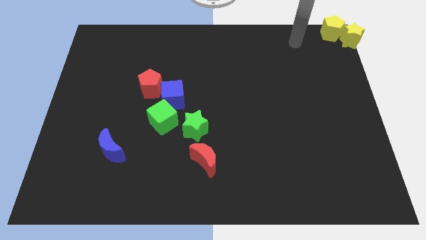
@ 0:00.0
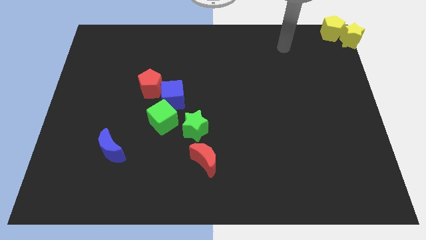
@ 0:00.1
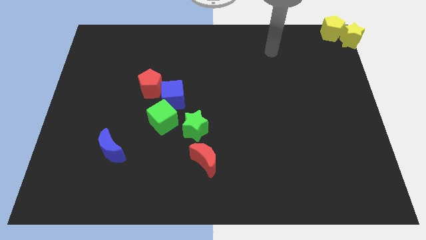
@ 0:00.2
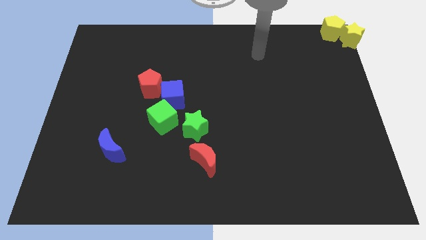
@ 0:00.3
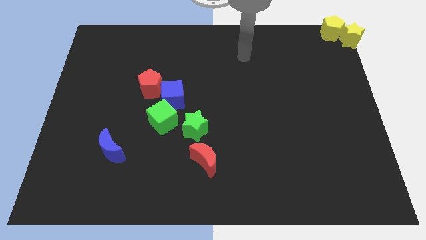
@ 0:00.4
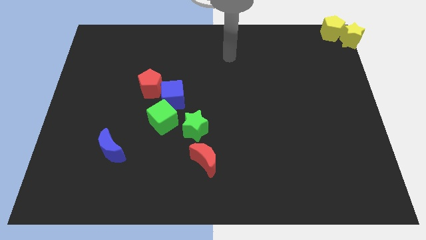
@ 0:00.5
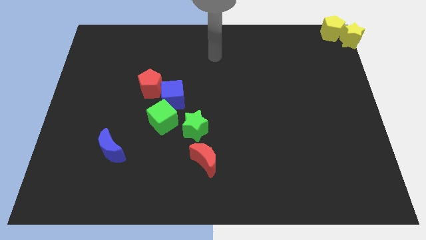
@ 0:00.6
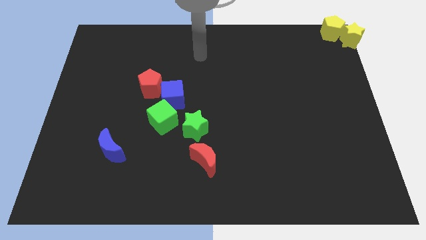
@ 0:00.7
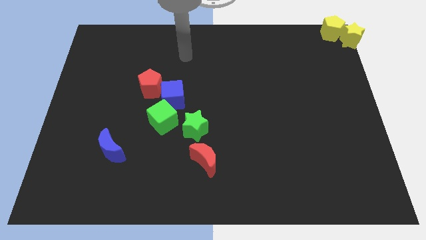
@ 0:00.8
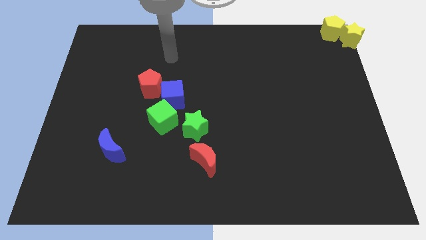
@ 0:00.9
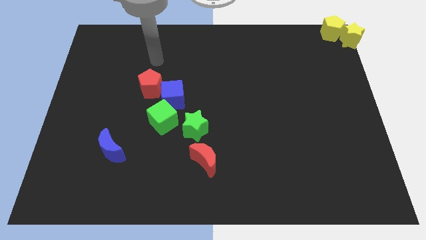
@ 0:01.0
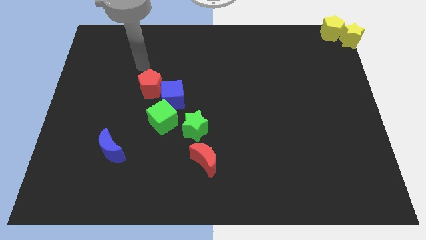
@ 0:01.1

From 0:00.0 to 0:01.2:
point your arm at the top of the red pentagon

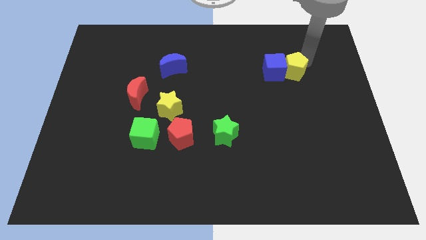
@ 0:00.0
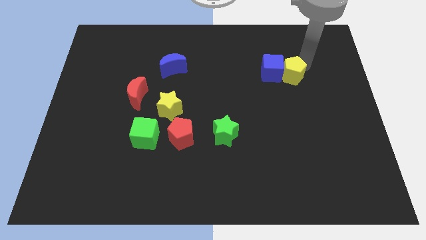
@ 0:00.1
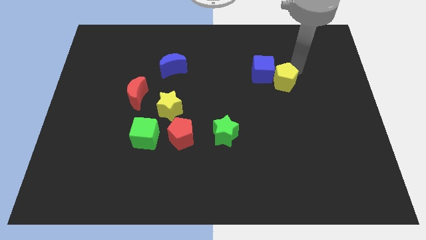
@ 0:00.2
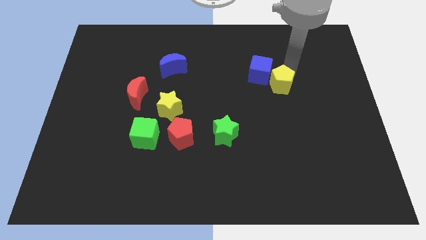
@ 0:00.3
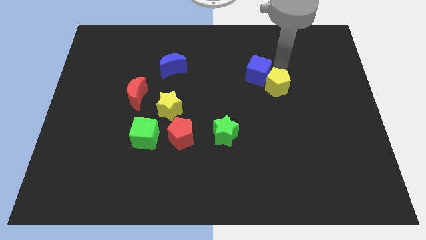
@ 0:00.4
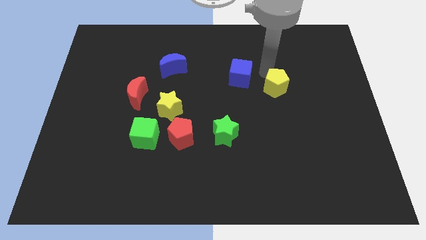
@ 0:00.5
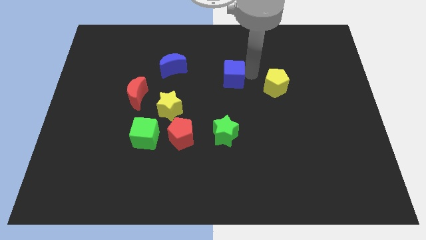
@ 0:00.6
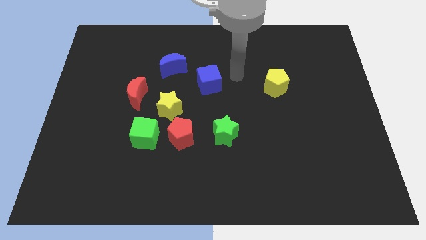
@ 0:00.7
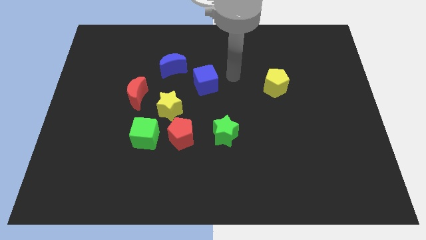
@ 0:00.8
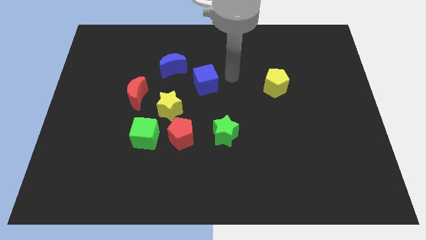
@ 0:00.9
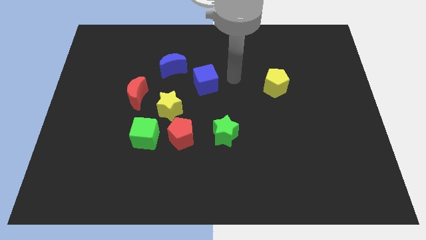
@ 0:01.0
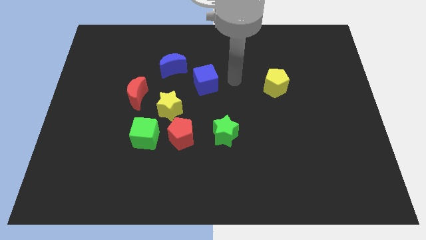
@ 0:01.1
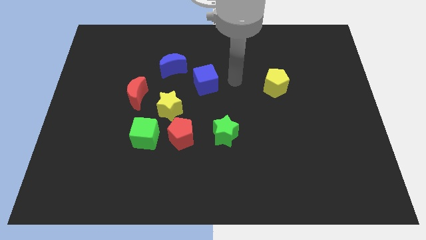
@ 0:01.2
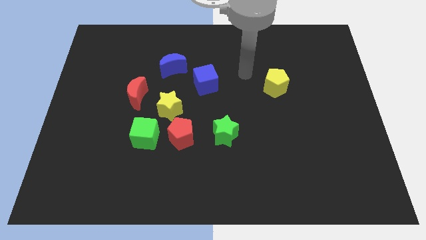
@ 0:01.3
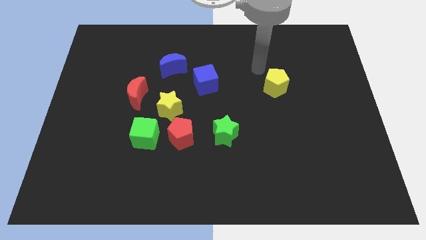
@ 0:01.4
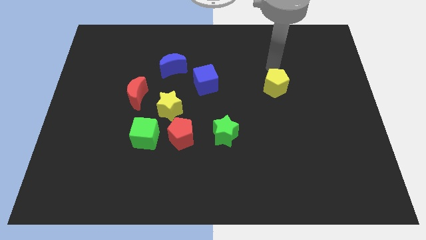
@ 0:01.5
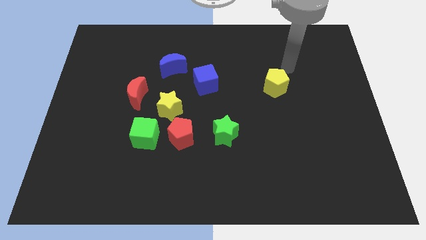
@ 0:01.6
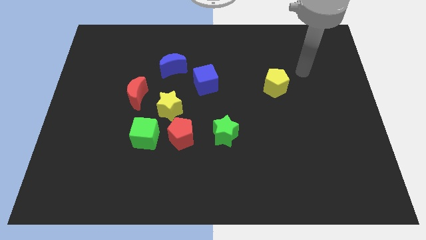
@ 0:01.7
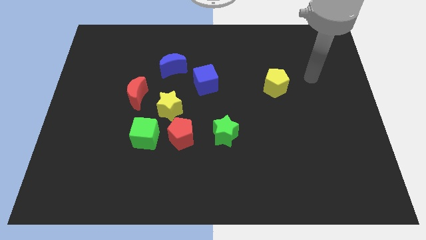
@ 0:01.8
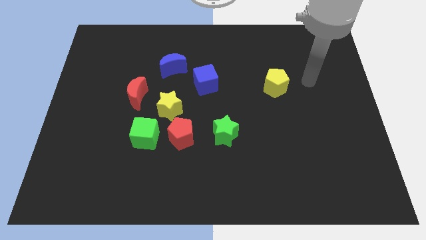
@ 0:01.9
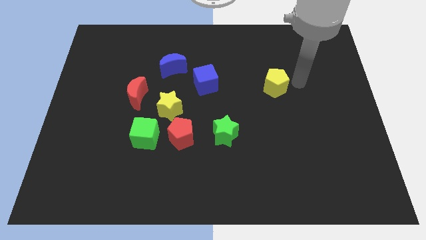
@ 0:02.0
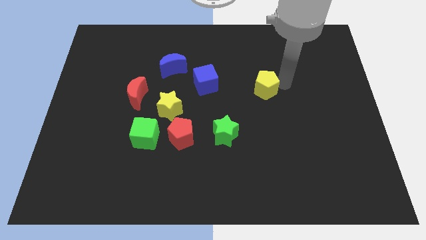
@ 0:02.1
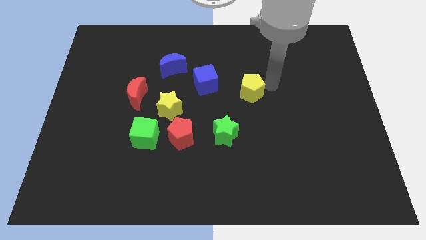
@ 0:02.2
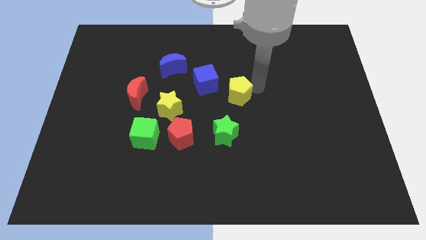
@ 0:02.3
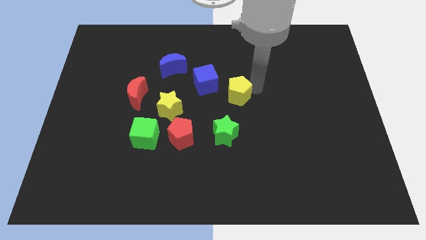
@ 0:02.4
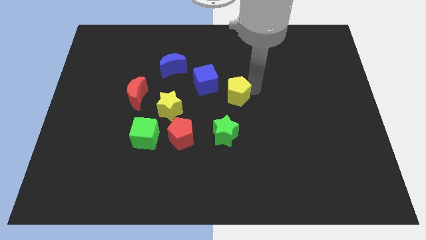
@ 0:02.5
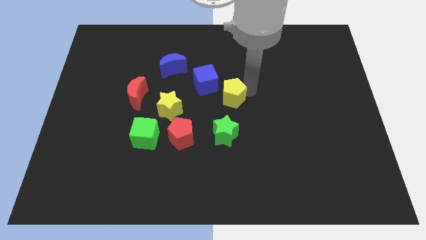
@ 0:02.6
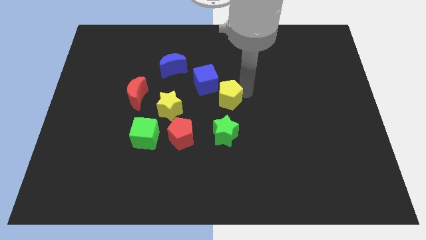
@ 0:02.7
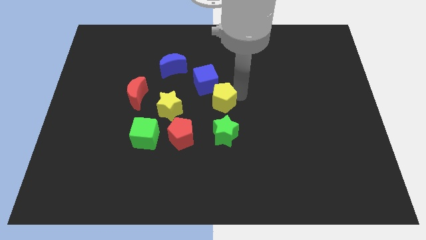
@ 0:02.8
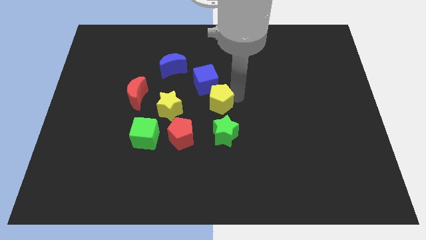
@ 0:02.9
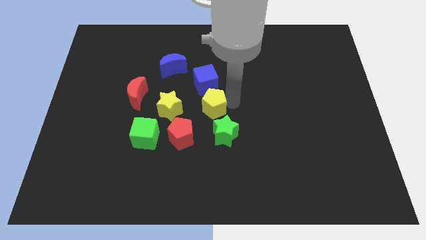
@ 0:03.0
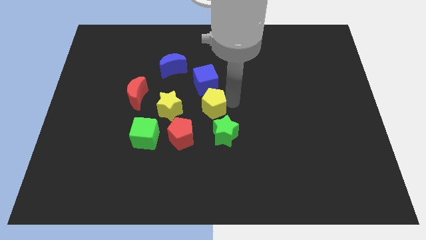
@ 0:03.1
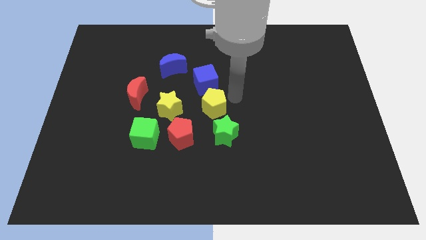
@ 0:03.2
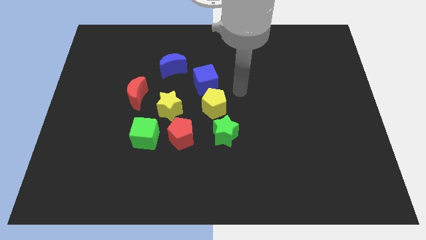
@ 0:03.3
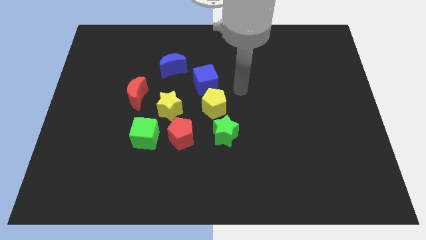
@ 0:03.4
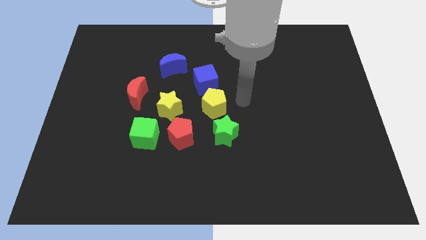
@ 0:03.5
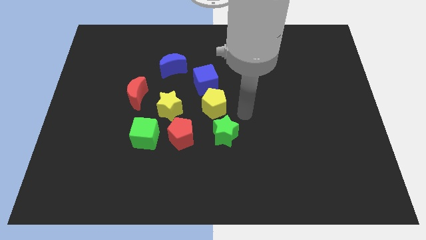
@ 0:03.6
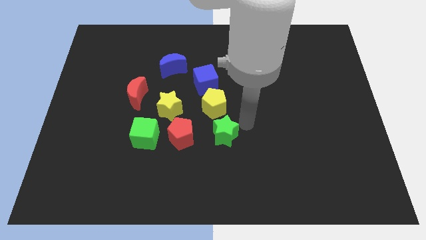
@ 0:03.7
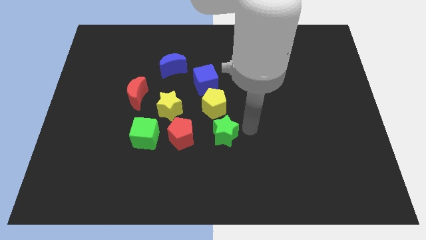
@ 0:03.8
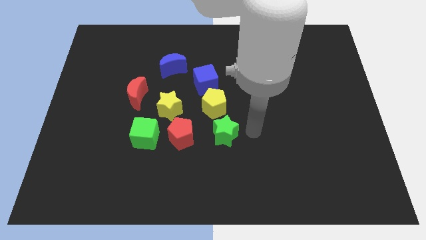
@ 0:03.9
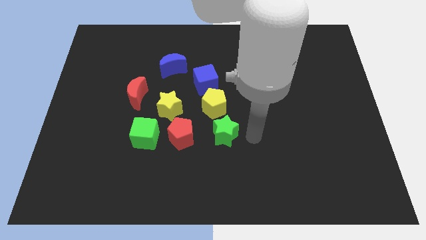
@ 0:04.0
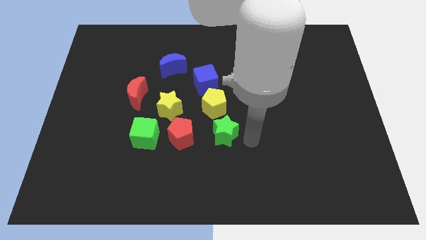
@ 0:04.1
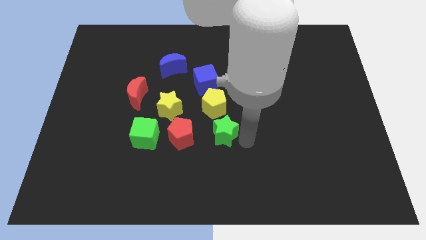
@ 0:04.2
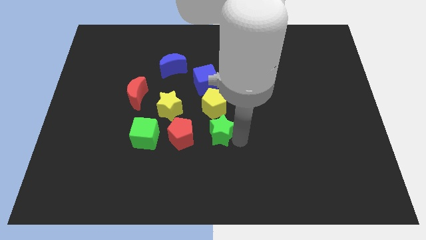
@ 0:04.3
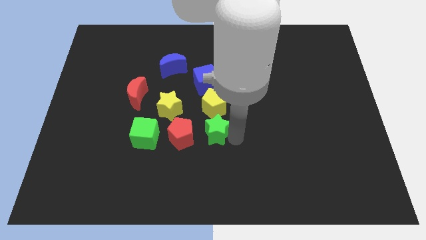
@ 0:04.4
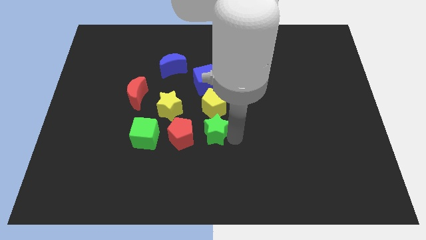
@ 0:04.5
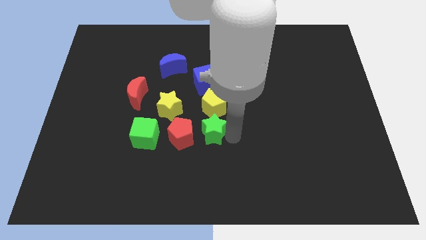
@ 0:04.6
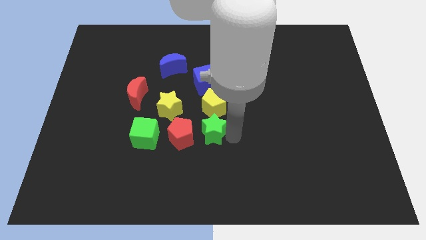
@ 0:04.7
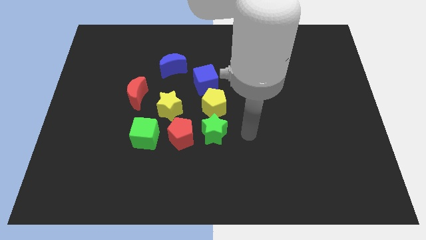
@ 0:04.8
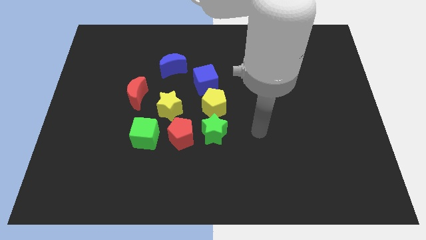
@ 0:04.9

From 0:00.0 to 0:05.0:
place the blue cube and yellow pentagon vertically to the green star

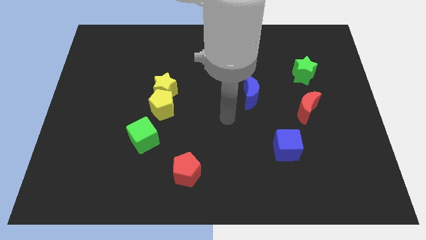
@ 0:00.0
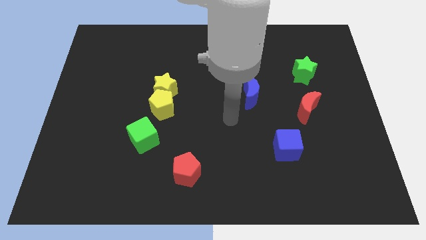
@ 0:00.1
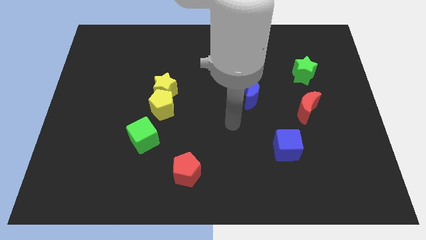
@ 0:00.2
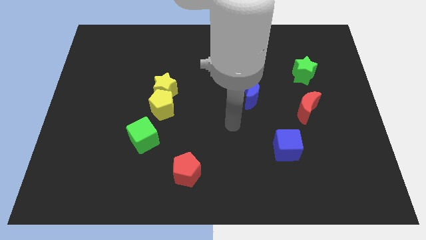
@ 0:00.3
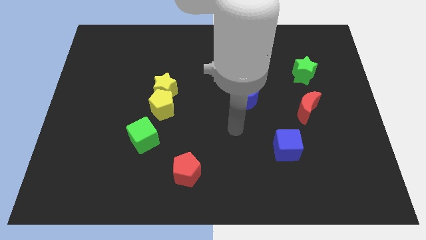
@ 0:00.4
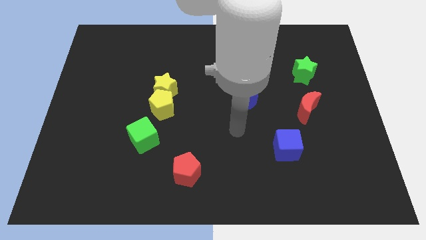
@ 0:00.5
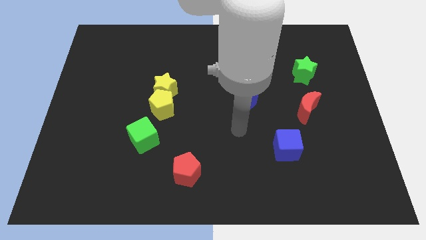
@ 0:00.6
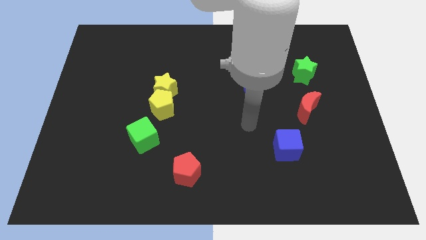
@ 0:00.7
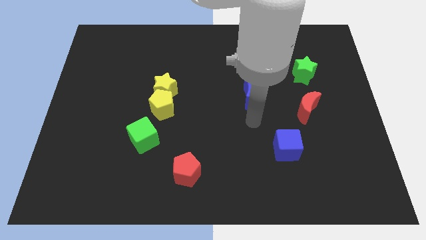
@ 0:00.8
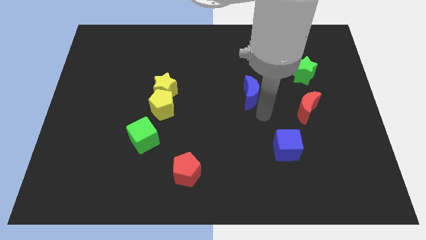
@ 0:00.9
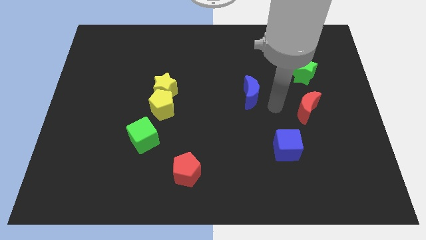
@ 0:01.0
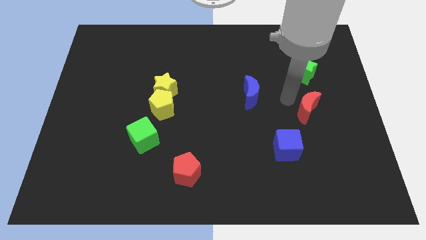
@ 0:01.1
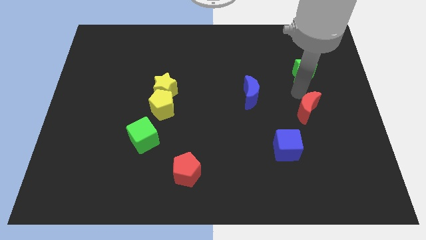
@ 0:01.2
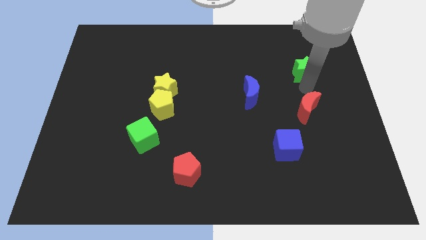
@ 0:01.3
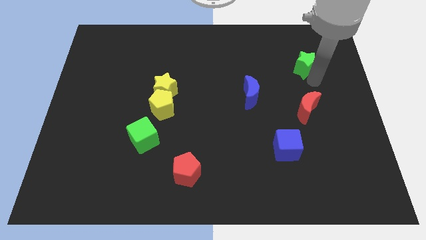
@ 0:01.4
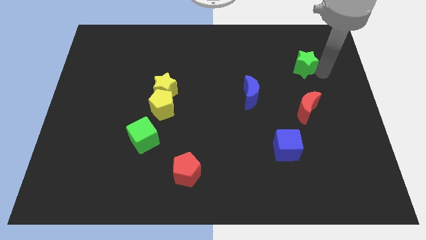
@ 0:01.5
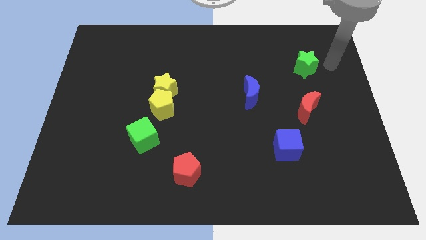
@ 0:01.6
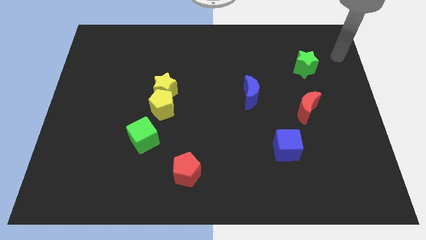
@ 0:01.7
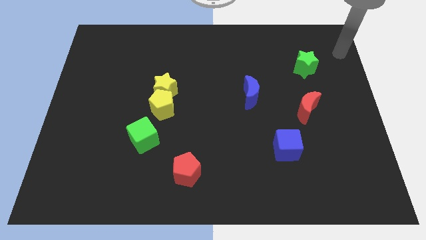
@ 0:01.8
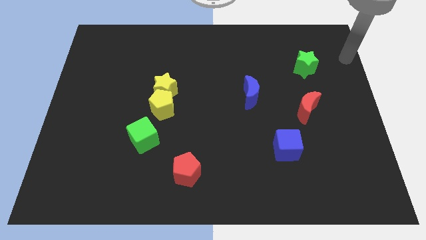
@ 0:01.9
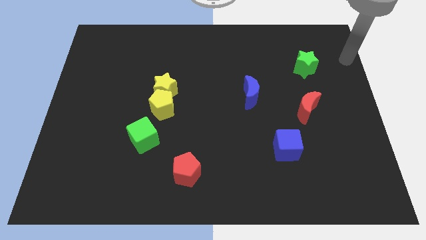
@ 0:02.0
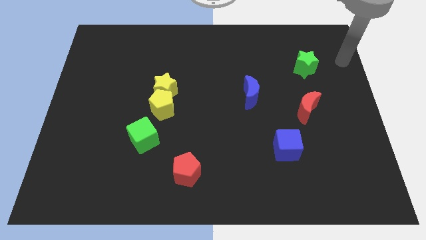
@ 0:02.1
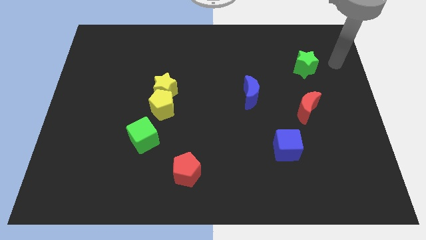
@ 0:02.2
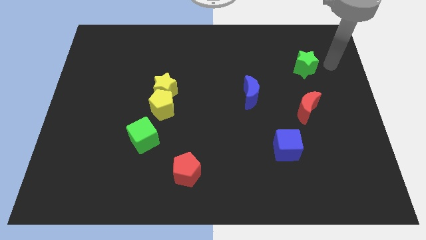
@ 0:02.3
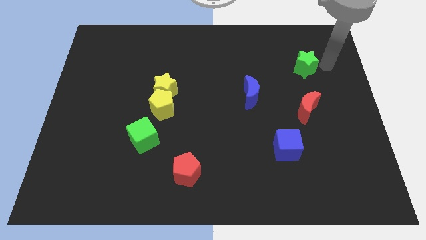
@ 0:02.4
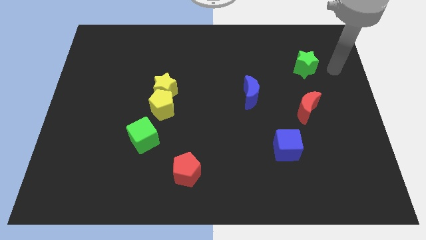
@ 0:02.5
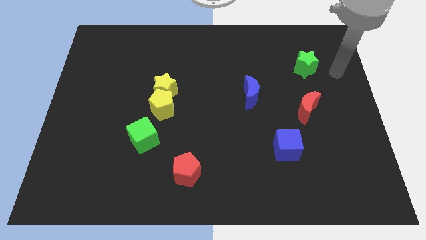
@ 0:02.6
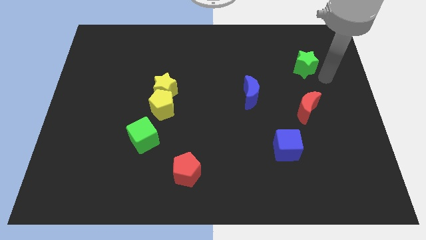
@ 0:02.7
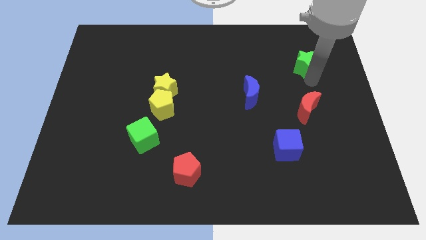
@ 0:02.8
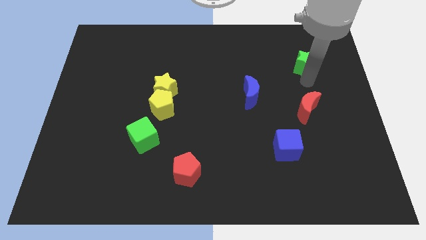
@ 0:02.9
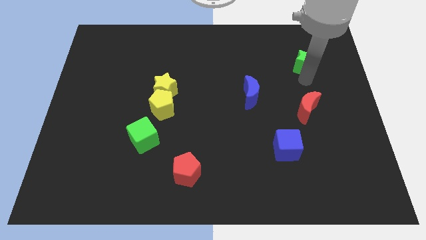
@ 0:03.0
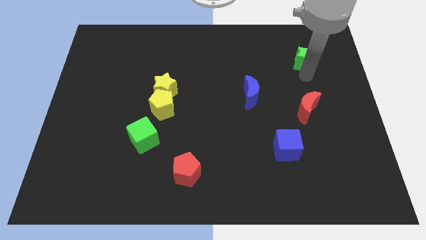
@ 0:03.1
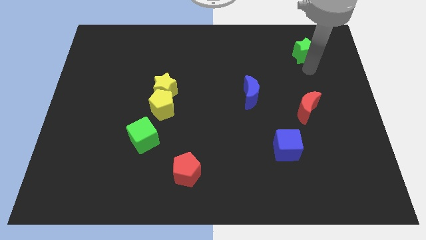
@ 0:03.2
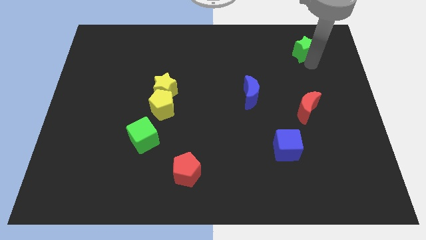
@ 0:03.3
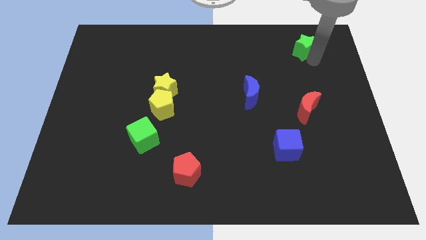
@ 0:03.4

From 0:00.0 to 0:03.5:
slightly move the green star up
